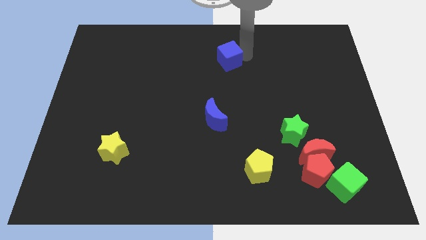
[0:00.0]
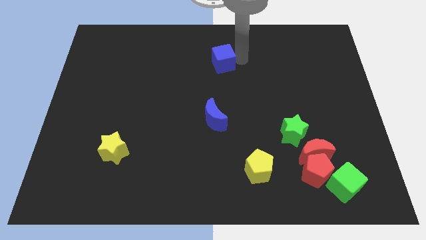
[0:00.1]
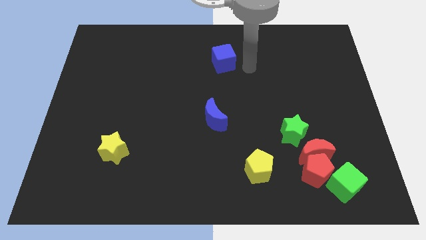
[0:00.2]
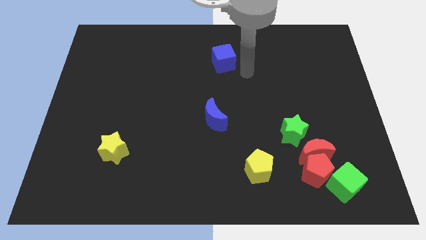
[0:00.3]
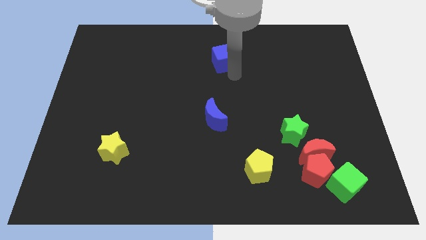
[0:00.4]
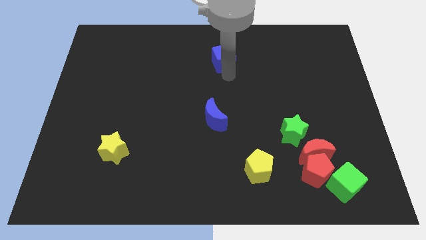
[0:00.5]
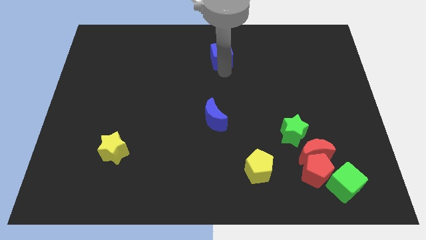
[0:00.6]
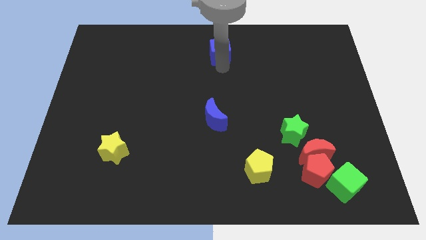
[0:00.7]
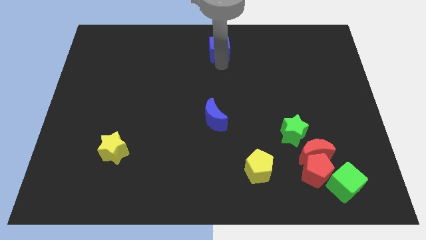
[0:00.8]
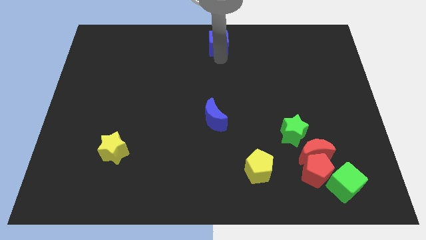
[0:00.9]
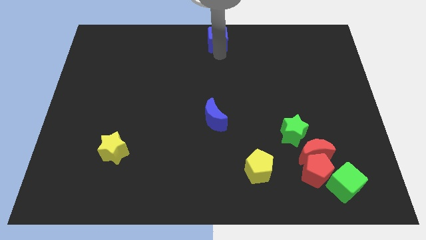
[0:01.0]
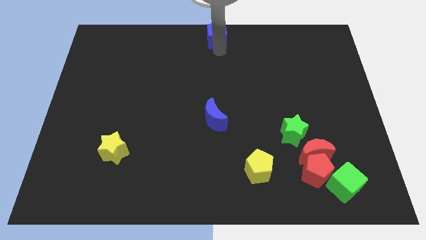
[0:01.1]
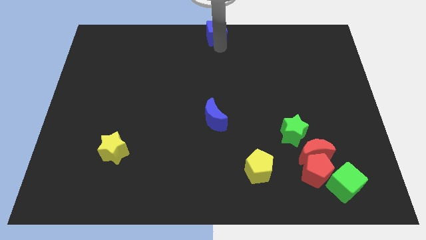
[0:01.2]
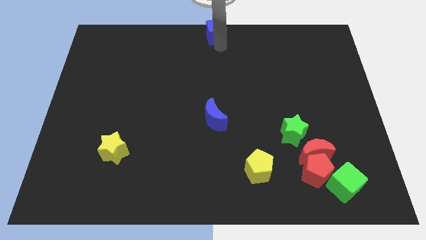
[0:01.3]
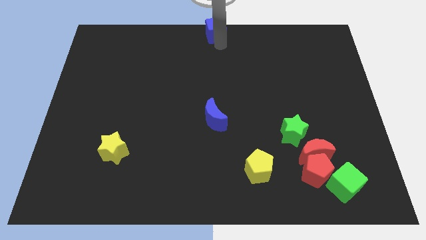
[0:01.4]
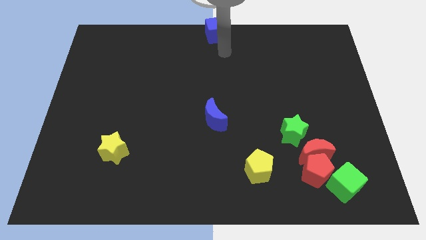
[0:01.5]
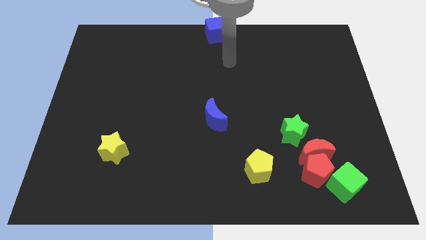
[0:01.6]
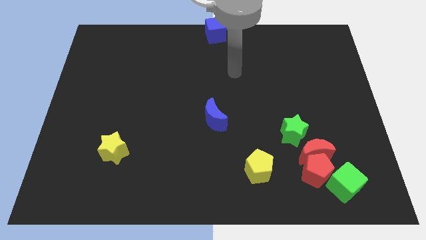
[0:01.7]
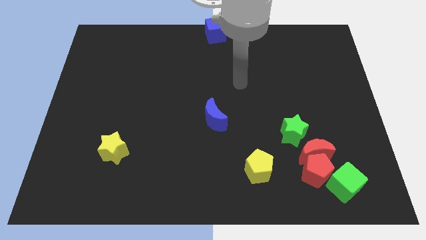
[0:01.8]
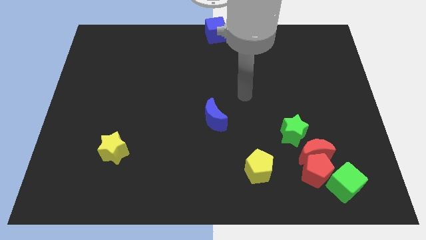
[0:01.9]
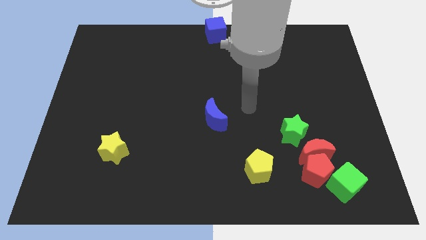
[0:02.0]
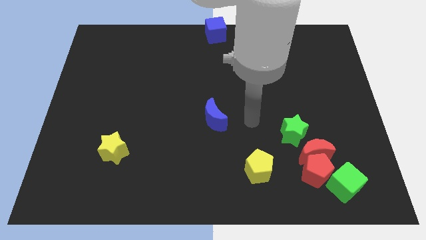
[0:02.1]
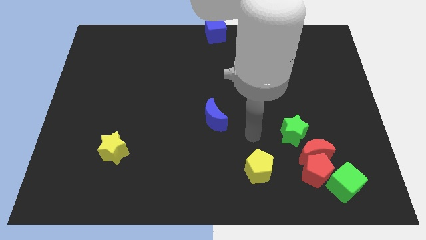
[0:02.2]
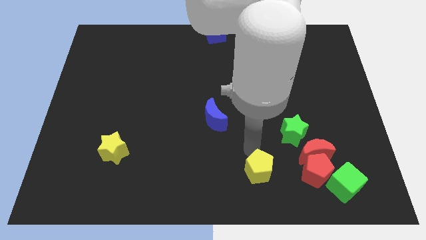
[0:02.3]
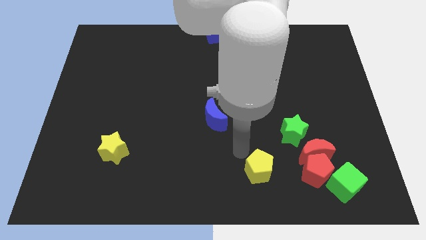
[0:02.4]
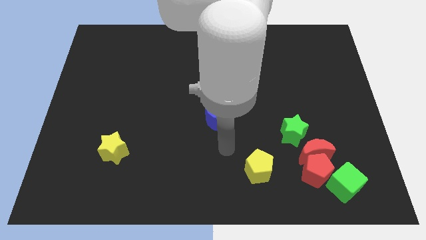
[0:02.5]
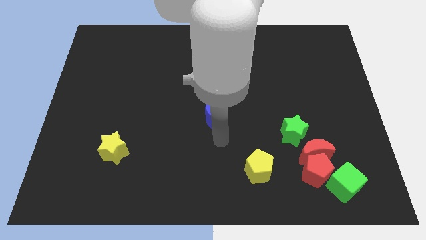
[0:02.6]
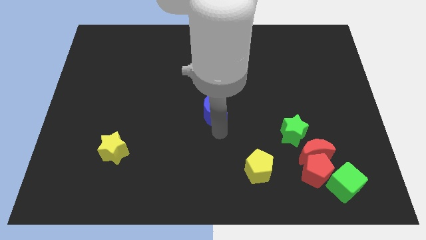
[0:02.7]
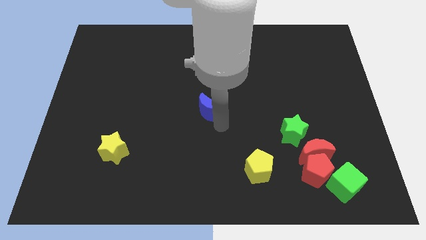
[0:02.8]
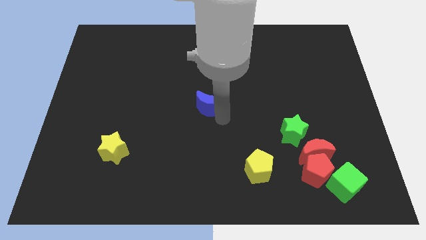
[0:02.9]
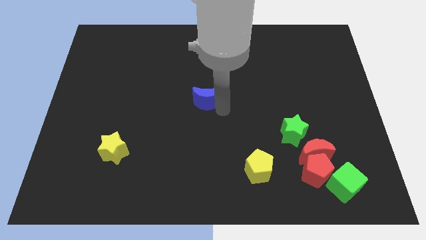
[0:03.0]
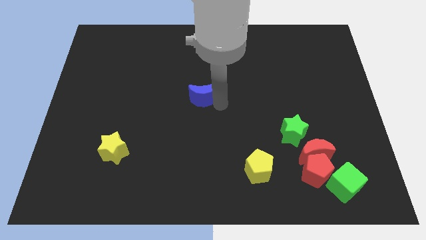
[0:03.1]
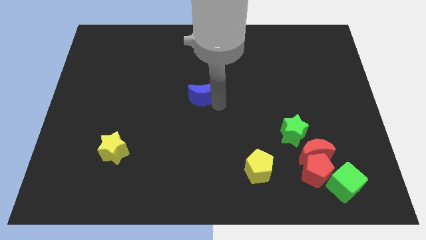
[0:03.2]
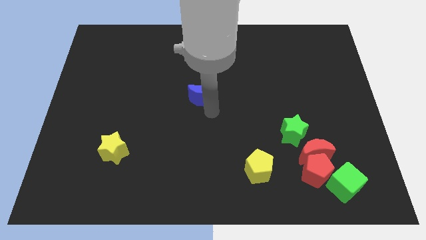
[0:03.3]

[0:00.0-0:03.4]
push the blue cube and blue moon to the top center of the board

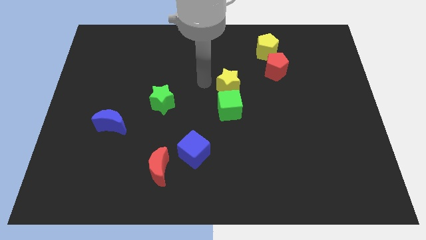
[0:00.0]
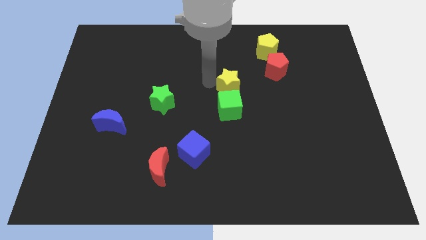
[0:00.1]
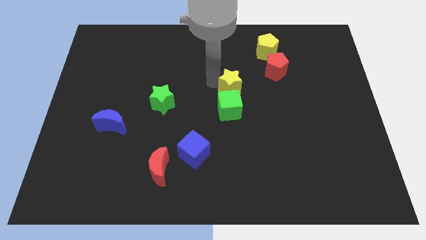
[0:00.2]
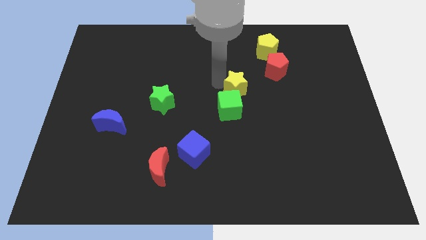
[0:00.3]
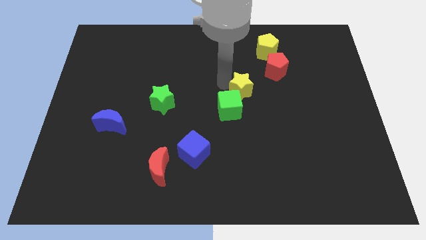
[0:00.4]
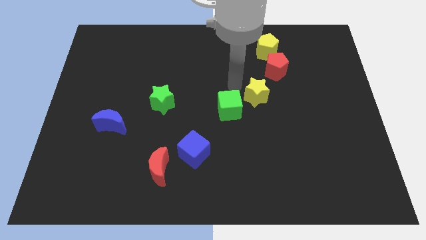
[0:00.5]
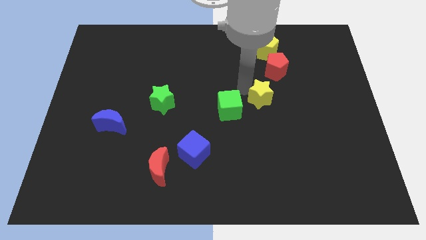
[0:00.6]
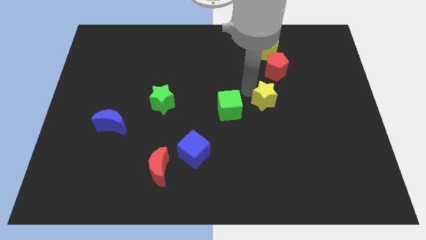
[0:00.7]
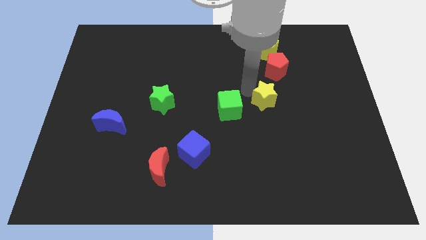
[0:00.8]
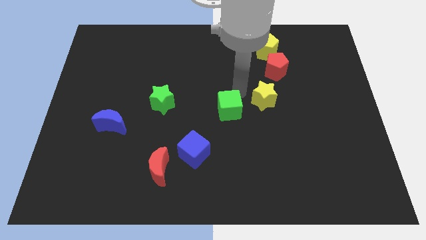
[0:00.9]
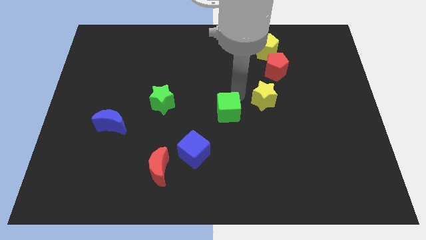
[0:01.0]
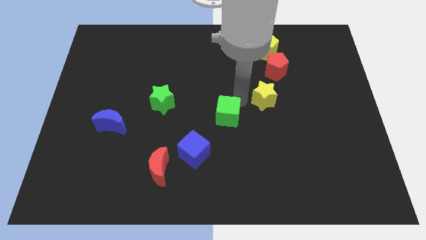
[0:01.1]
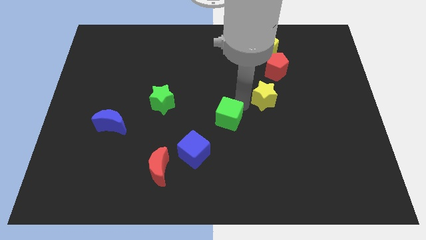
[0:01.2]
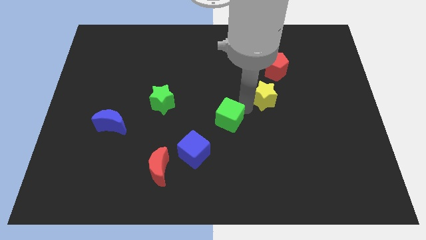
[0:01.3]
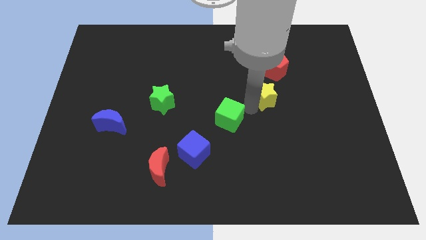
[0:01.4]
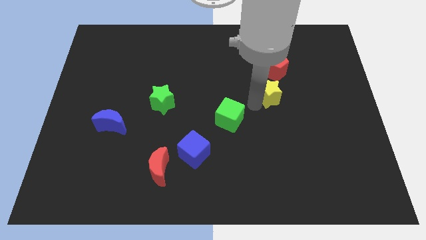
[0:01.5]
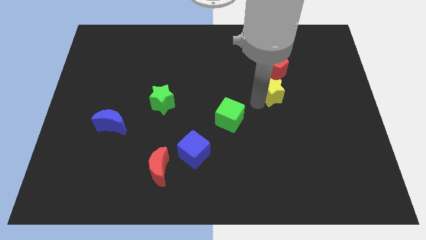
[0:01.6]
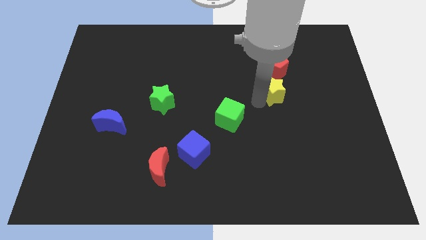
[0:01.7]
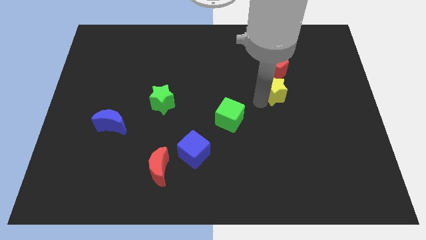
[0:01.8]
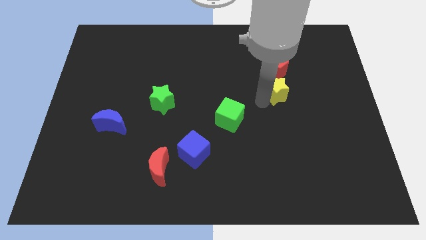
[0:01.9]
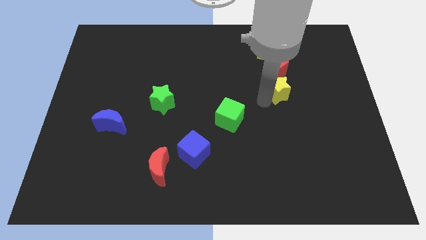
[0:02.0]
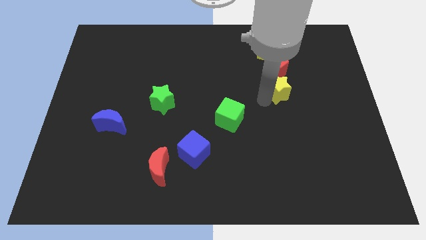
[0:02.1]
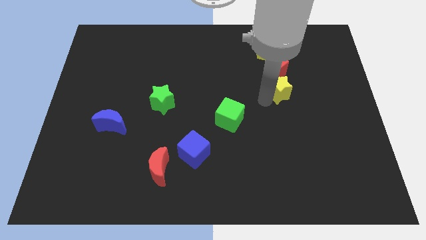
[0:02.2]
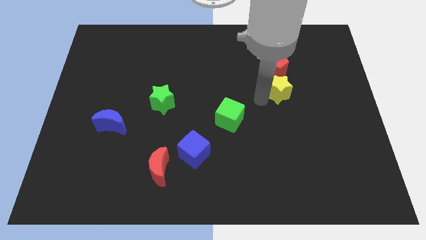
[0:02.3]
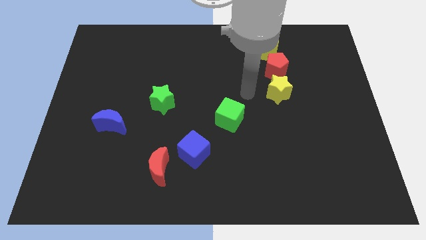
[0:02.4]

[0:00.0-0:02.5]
place the yellow star below to the red pentagon

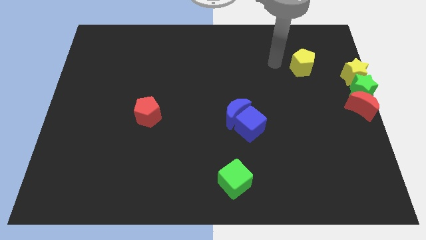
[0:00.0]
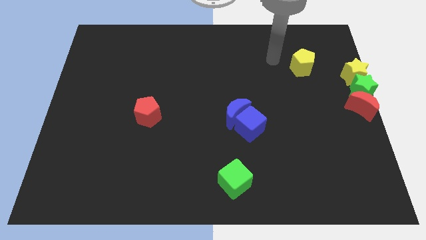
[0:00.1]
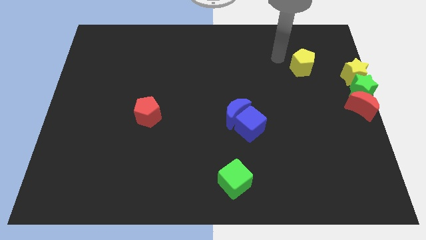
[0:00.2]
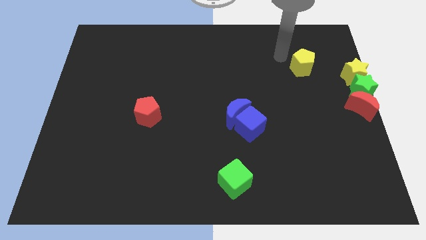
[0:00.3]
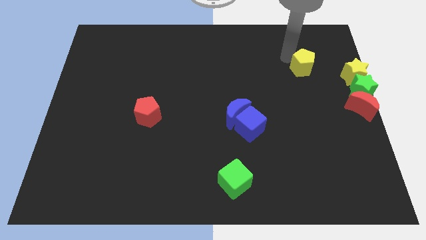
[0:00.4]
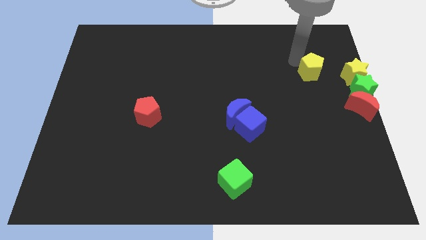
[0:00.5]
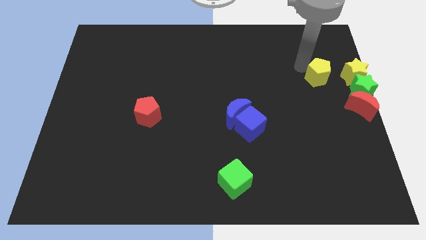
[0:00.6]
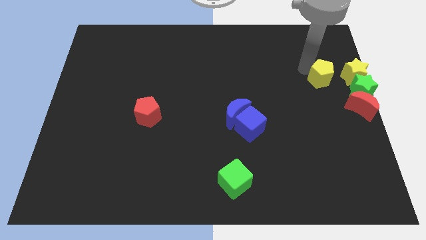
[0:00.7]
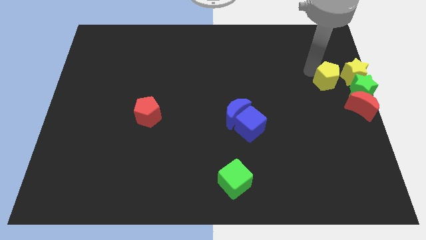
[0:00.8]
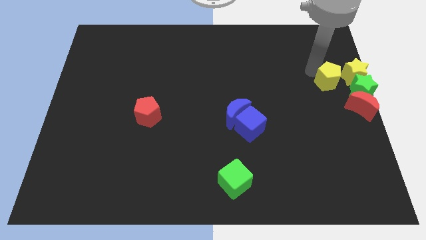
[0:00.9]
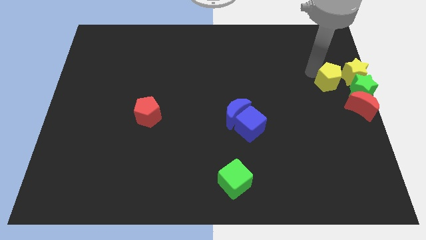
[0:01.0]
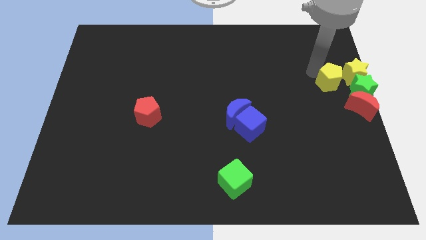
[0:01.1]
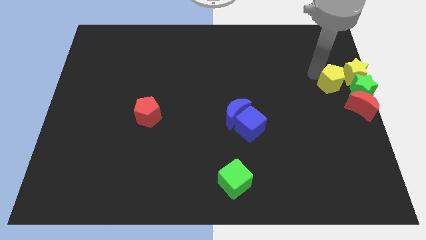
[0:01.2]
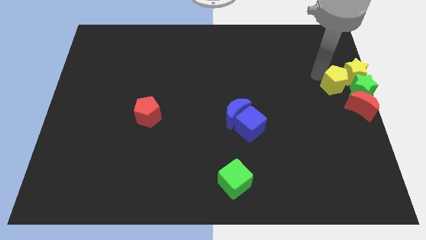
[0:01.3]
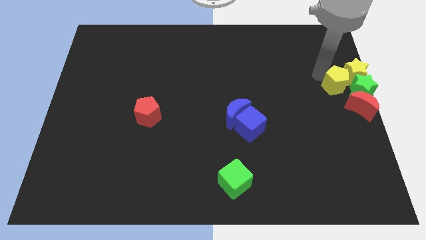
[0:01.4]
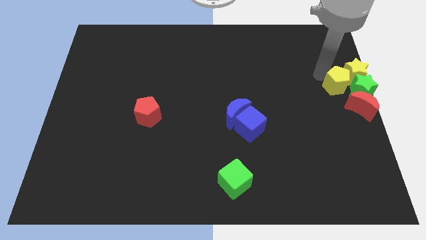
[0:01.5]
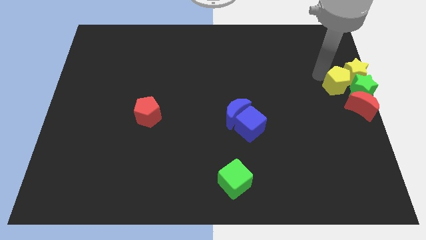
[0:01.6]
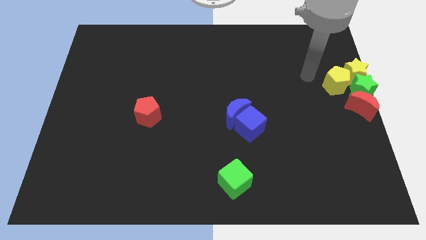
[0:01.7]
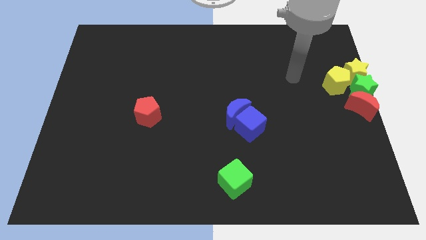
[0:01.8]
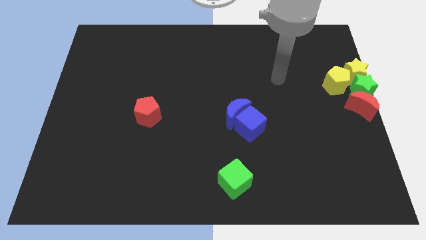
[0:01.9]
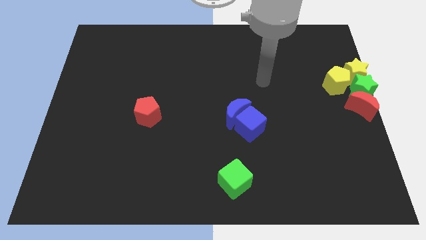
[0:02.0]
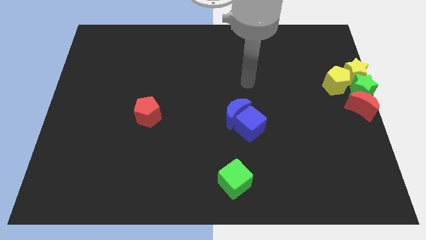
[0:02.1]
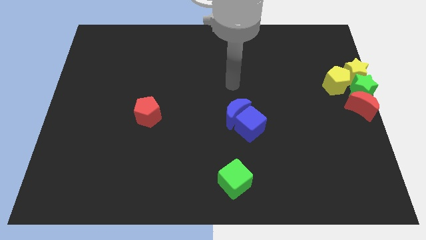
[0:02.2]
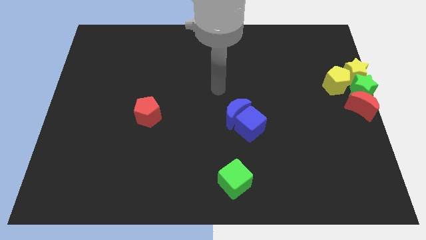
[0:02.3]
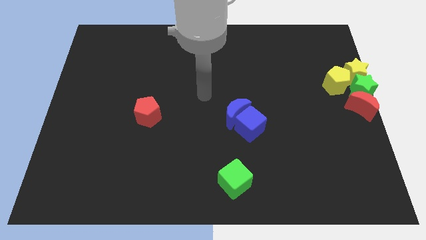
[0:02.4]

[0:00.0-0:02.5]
push the yellow pentagon to the left of the green star

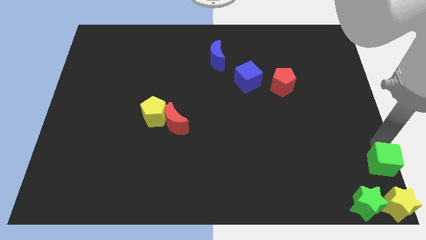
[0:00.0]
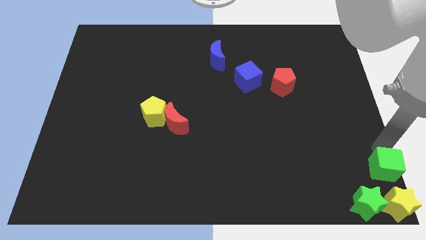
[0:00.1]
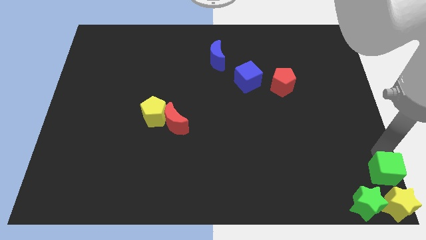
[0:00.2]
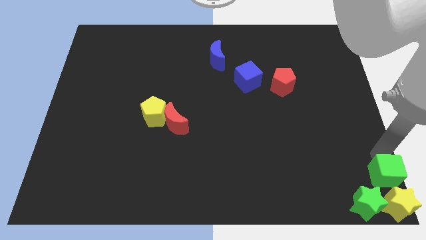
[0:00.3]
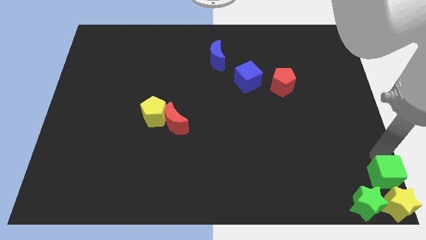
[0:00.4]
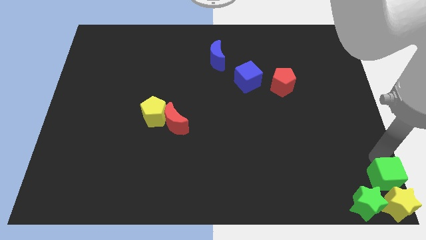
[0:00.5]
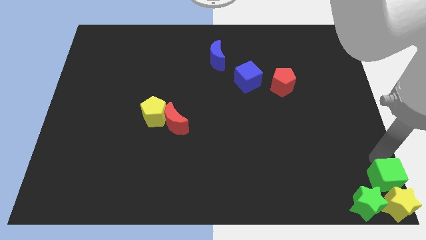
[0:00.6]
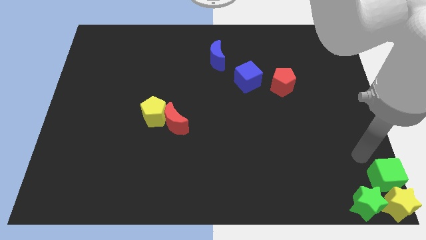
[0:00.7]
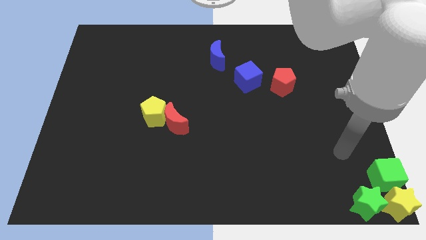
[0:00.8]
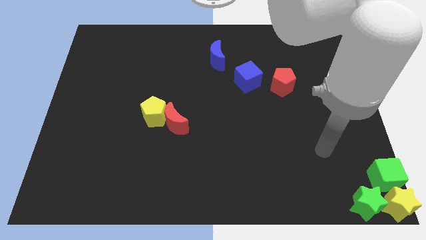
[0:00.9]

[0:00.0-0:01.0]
place the green cube close to the yellow star
